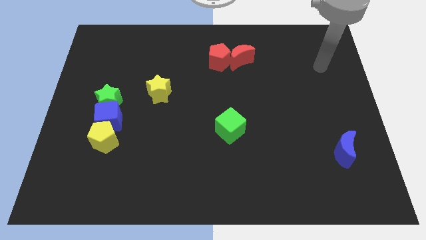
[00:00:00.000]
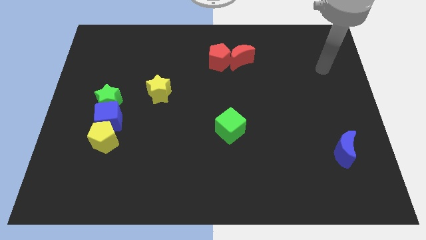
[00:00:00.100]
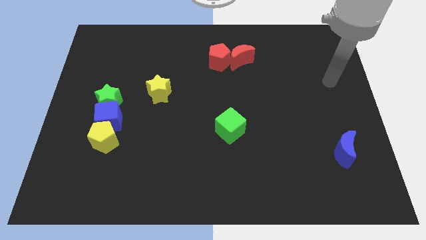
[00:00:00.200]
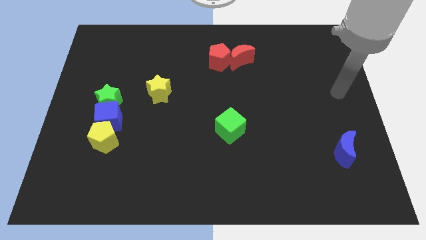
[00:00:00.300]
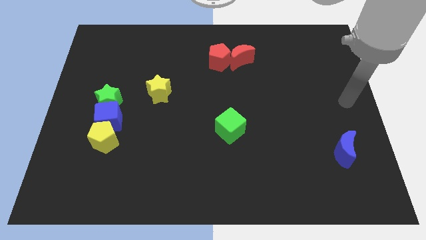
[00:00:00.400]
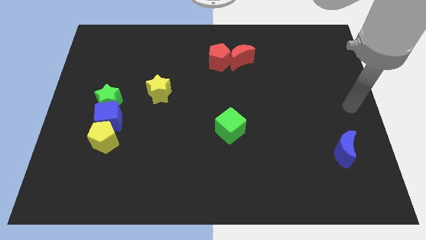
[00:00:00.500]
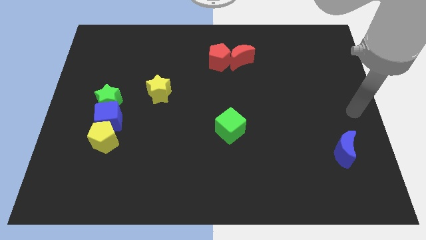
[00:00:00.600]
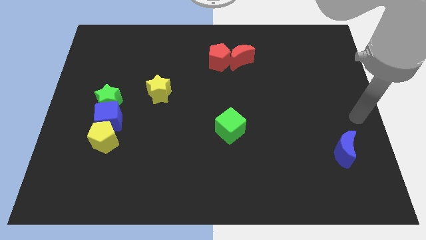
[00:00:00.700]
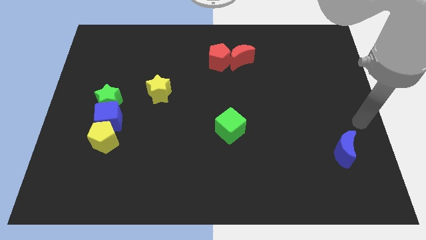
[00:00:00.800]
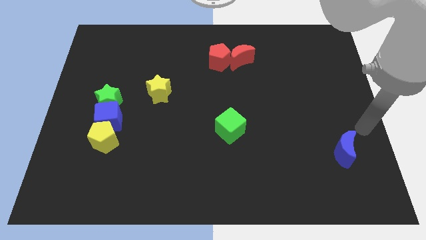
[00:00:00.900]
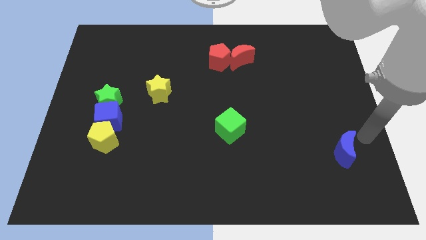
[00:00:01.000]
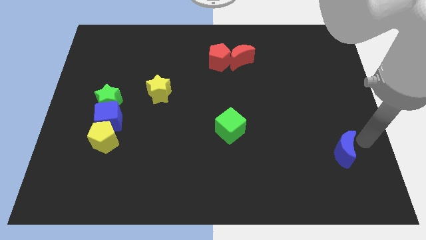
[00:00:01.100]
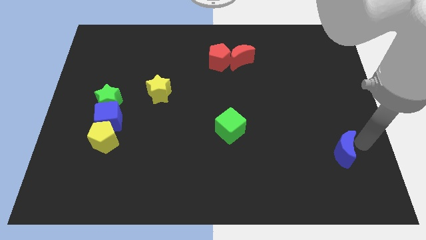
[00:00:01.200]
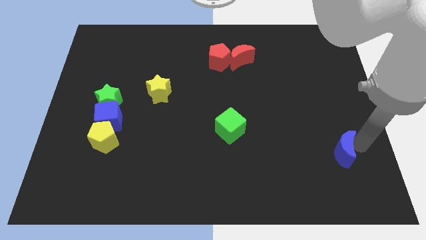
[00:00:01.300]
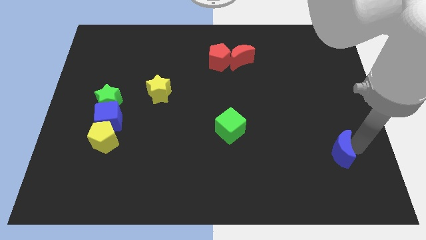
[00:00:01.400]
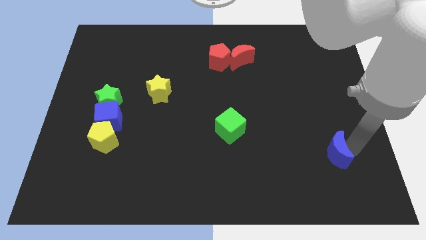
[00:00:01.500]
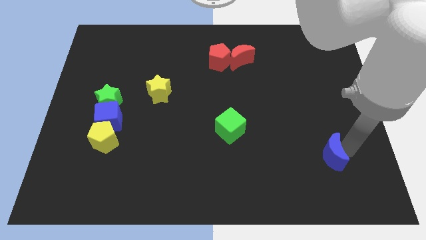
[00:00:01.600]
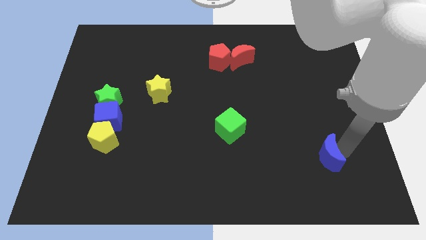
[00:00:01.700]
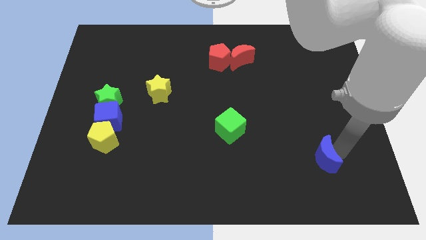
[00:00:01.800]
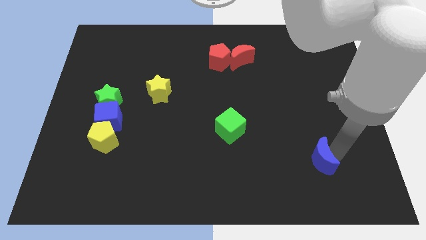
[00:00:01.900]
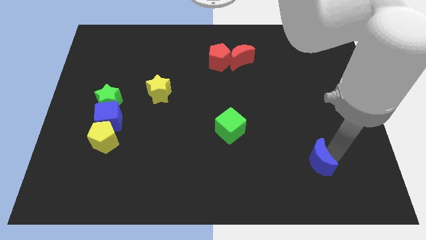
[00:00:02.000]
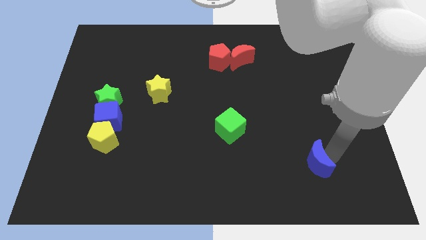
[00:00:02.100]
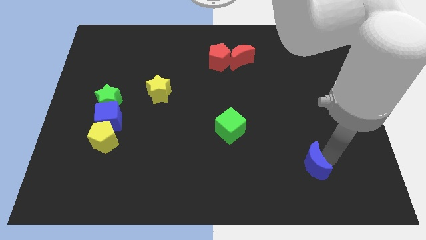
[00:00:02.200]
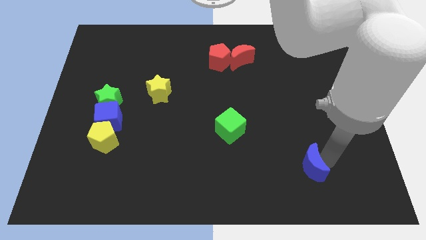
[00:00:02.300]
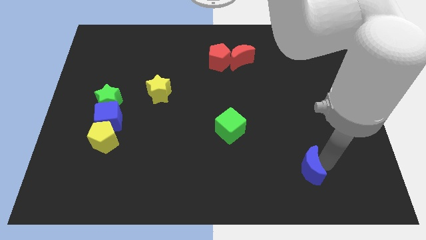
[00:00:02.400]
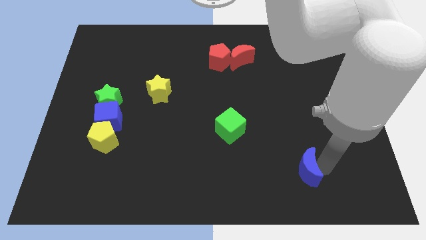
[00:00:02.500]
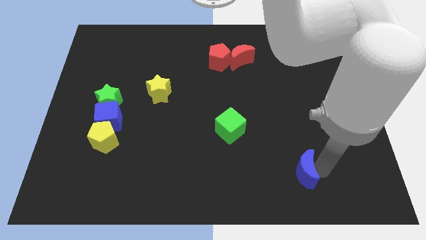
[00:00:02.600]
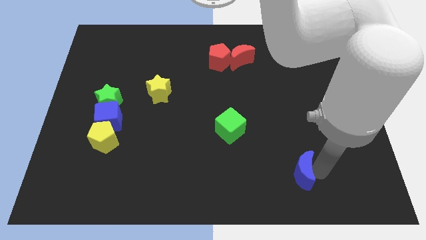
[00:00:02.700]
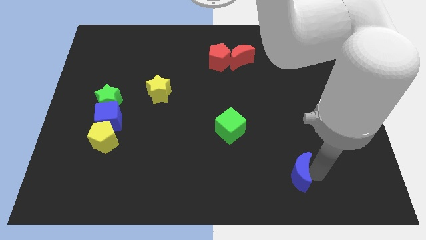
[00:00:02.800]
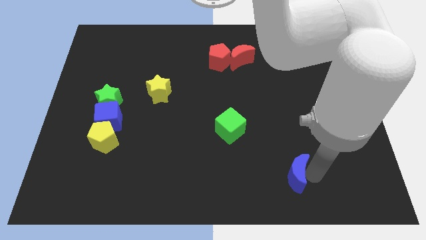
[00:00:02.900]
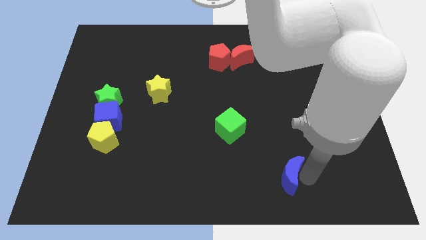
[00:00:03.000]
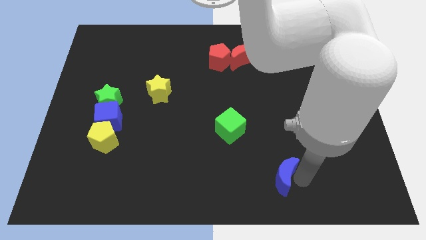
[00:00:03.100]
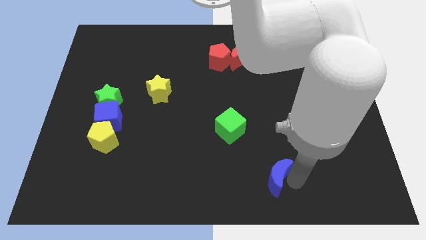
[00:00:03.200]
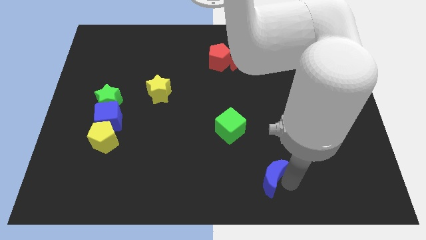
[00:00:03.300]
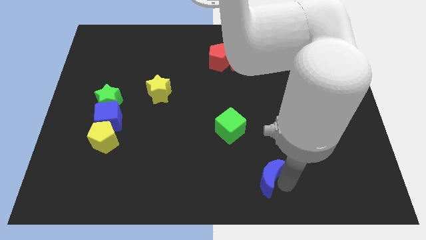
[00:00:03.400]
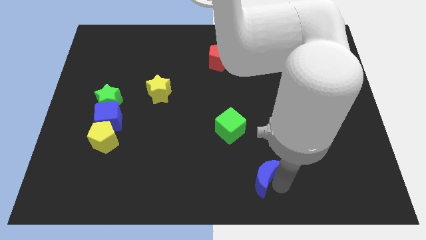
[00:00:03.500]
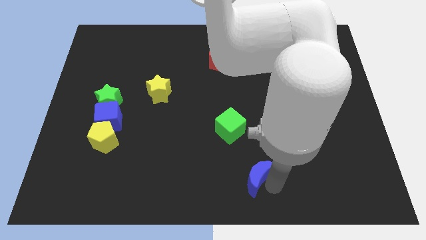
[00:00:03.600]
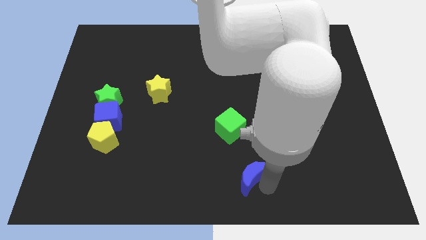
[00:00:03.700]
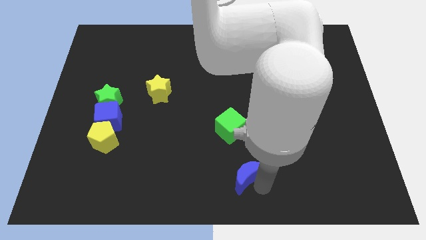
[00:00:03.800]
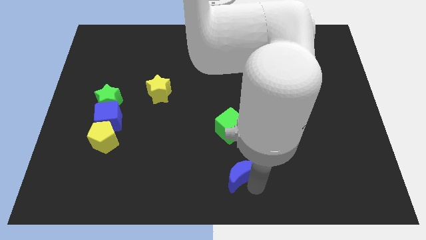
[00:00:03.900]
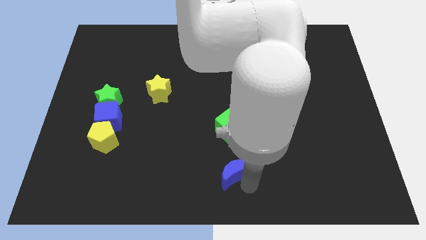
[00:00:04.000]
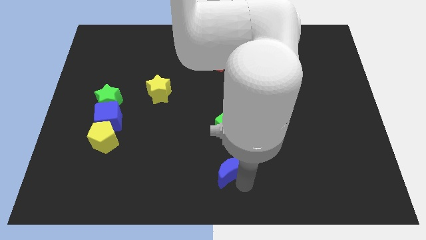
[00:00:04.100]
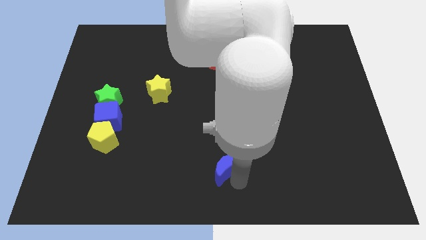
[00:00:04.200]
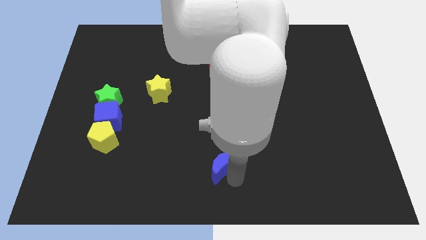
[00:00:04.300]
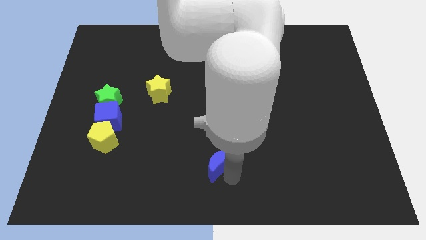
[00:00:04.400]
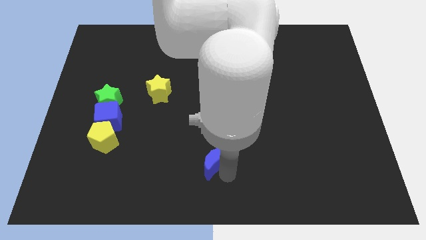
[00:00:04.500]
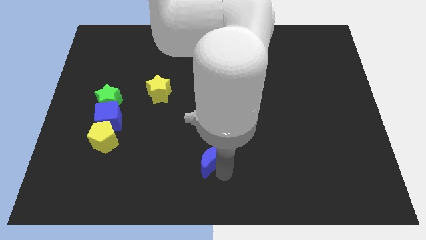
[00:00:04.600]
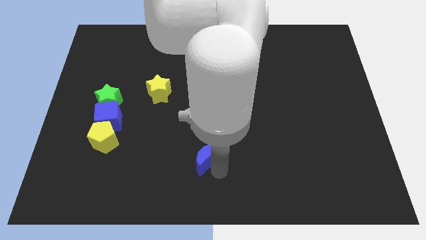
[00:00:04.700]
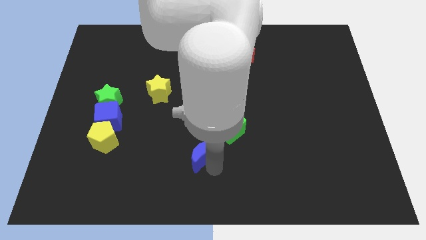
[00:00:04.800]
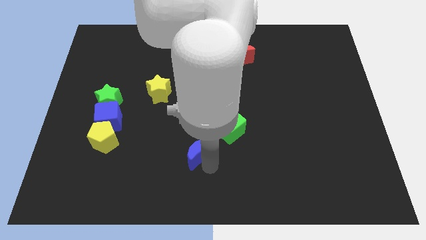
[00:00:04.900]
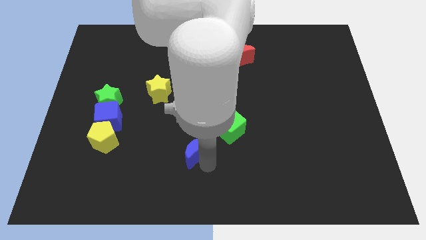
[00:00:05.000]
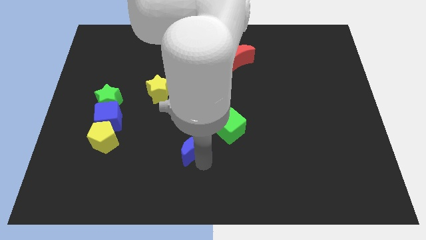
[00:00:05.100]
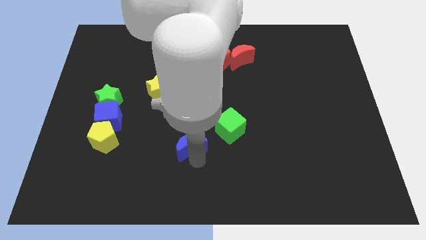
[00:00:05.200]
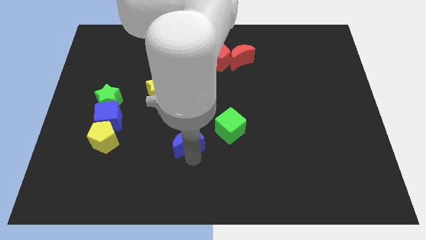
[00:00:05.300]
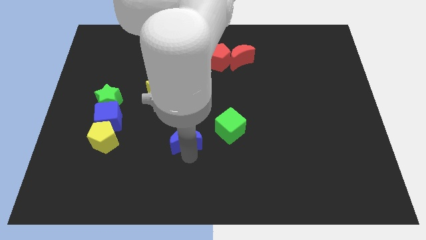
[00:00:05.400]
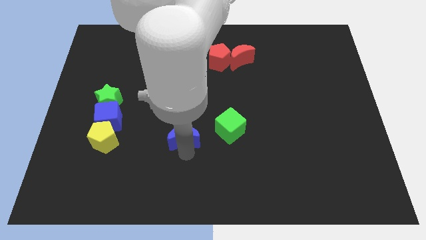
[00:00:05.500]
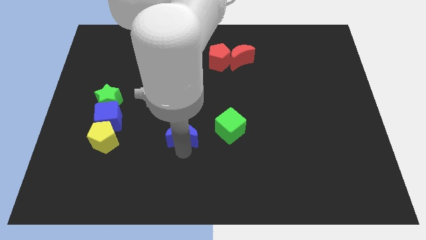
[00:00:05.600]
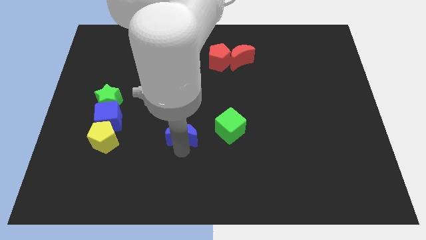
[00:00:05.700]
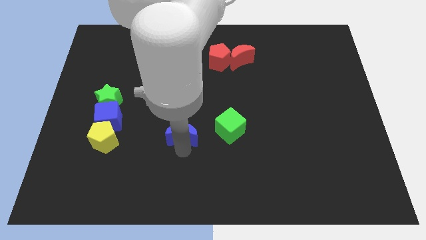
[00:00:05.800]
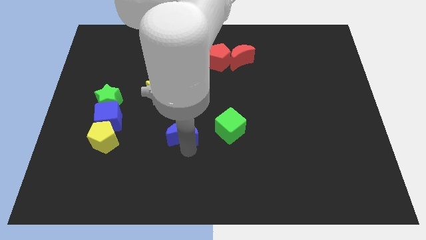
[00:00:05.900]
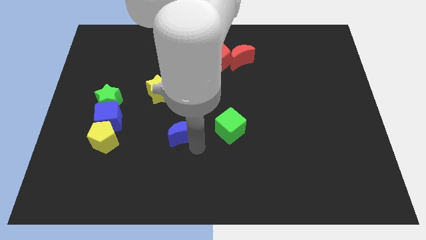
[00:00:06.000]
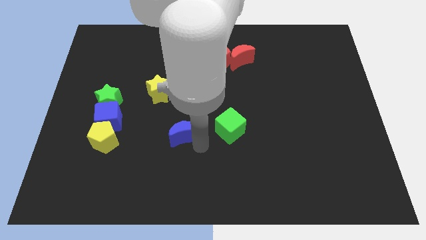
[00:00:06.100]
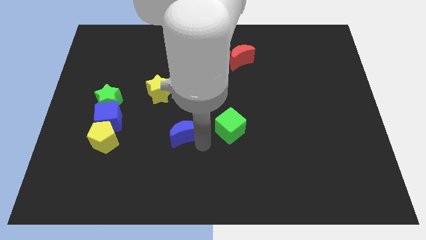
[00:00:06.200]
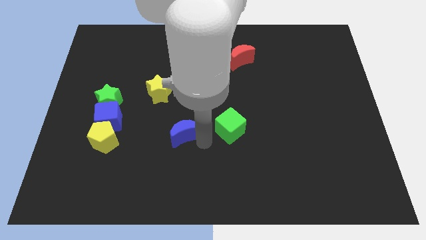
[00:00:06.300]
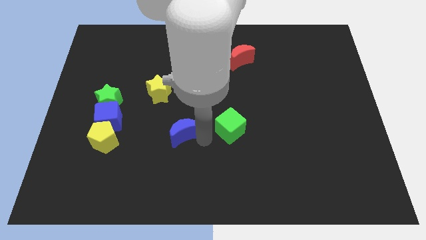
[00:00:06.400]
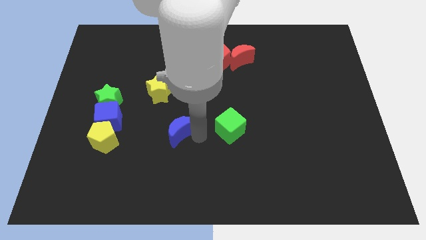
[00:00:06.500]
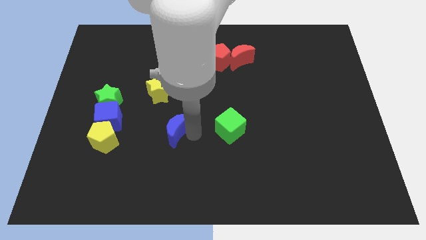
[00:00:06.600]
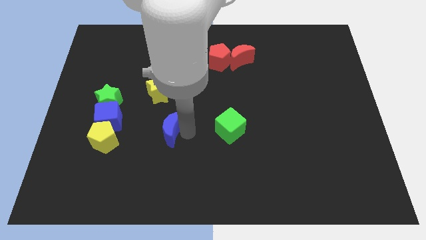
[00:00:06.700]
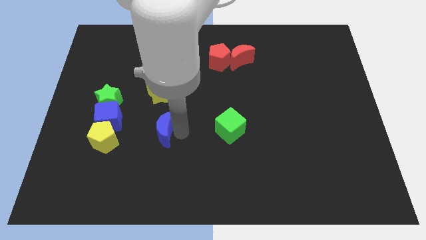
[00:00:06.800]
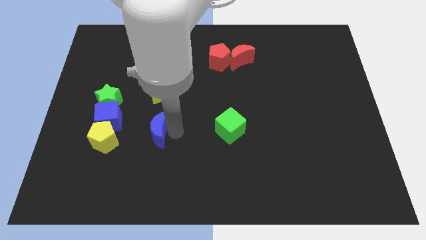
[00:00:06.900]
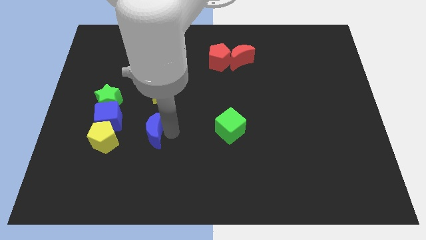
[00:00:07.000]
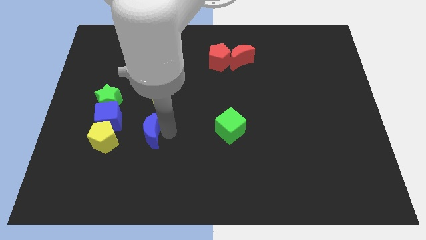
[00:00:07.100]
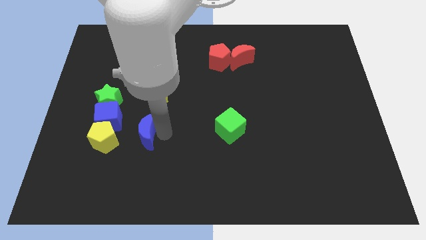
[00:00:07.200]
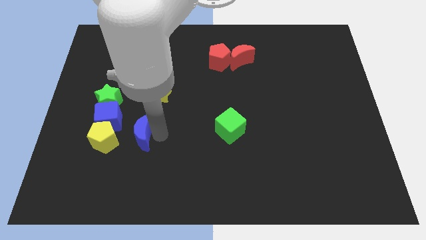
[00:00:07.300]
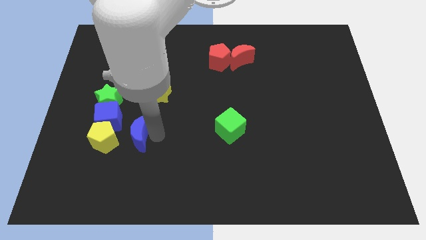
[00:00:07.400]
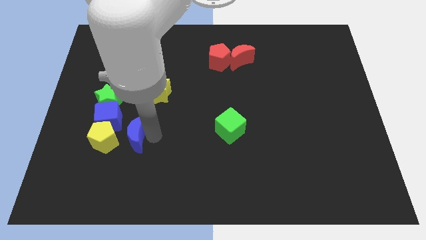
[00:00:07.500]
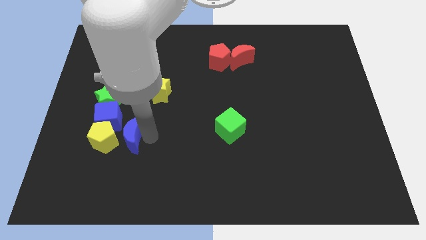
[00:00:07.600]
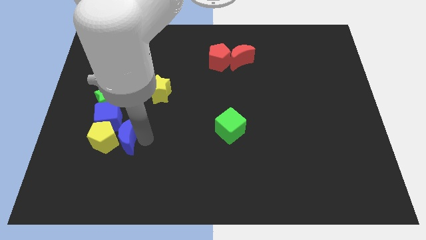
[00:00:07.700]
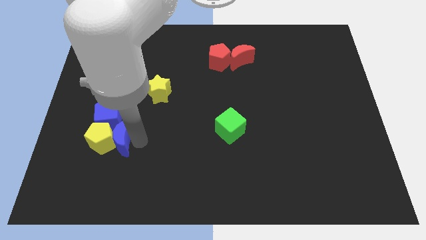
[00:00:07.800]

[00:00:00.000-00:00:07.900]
put the blue moon next to the yellow pentagon

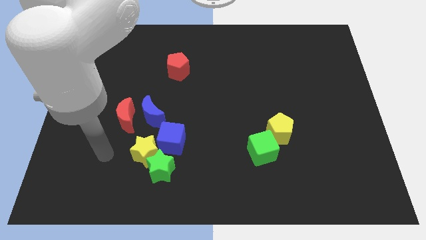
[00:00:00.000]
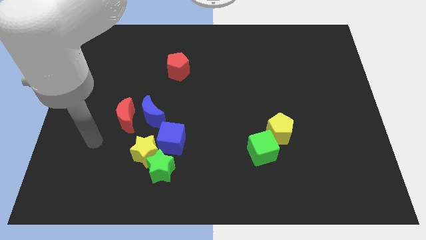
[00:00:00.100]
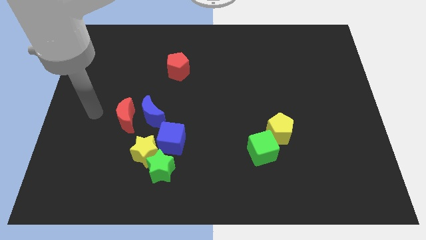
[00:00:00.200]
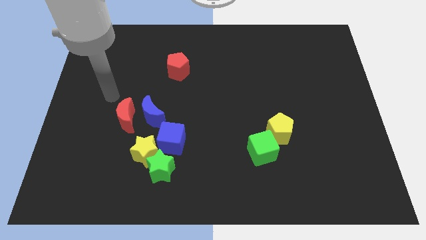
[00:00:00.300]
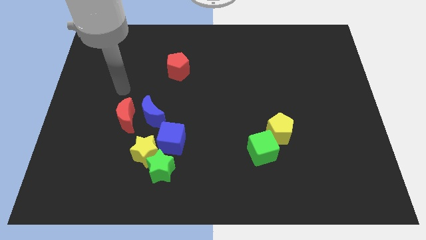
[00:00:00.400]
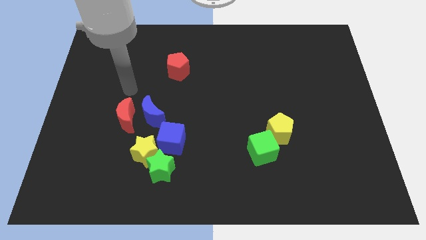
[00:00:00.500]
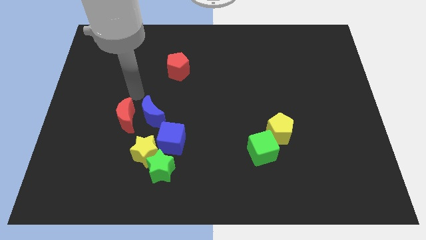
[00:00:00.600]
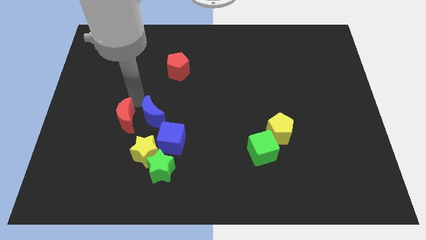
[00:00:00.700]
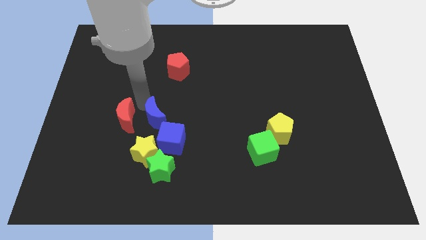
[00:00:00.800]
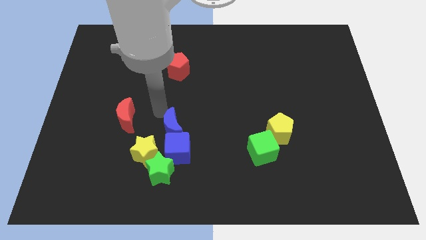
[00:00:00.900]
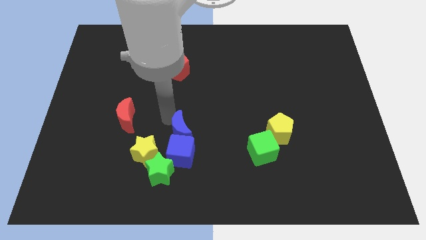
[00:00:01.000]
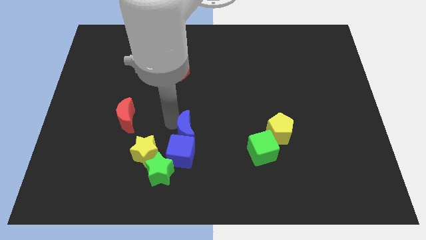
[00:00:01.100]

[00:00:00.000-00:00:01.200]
push the blue moon towards the blue cube
